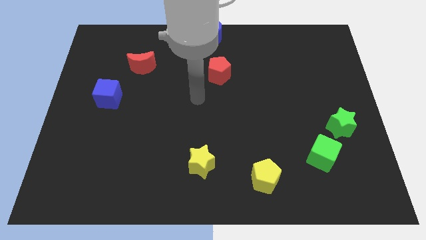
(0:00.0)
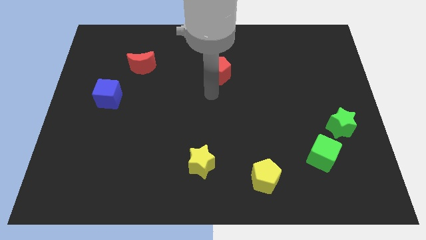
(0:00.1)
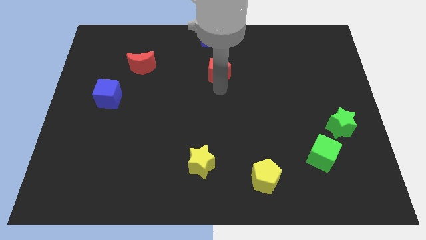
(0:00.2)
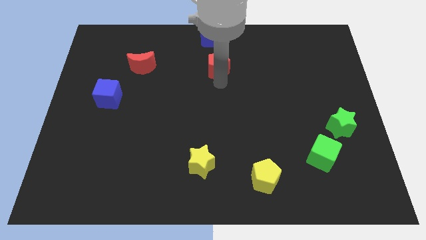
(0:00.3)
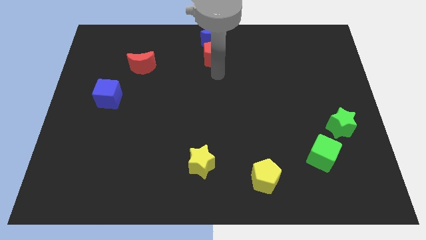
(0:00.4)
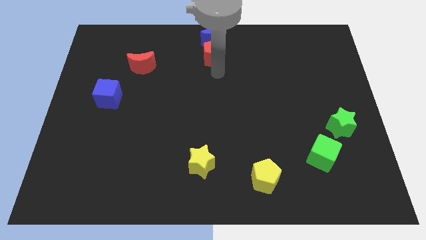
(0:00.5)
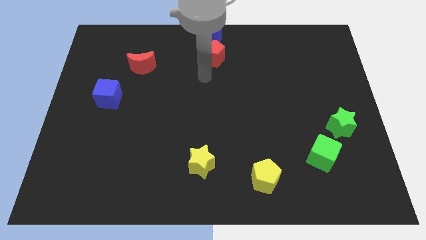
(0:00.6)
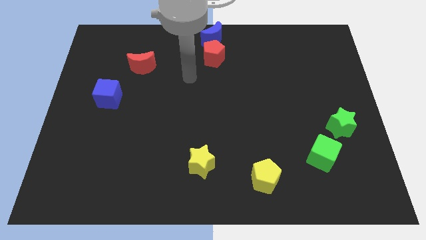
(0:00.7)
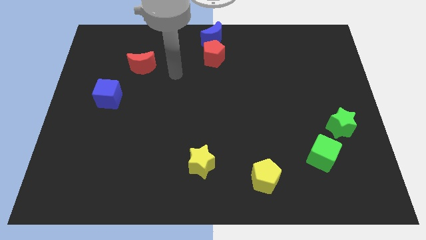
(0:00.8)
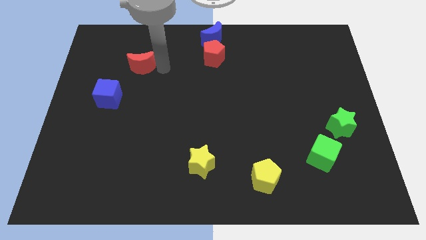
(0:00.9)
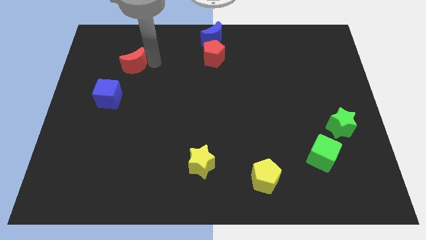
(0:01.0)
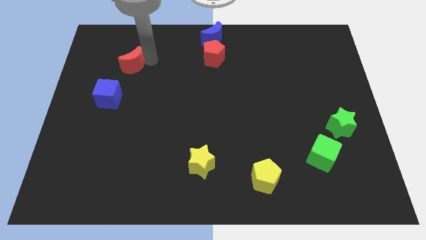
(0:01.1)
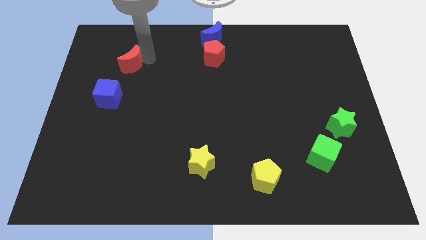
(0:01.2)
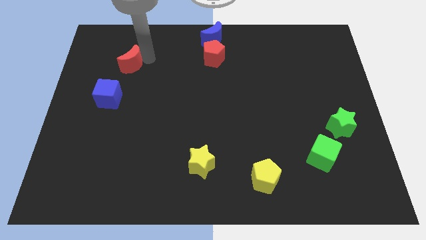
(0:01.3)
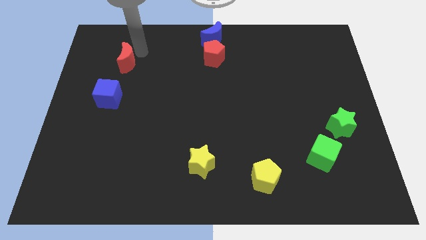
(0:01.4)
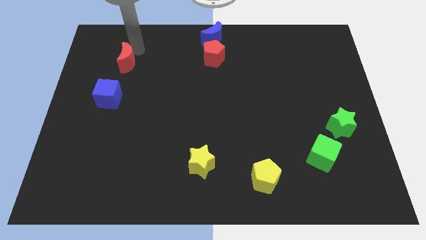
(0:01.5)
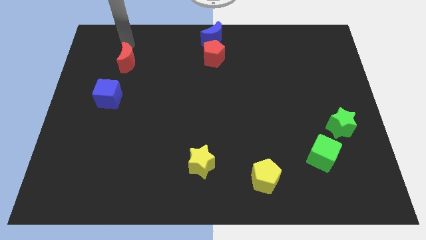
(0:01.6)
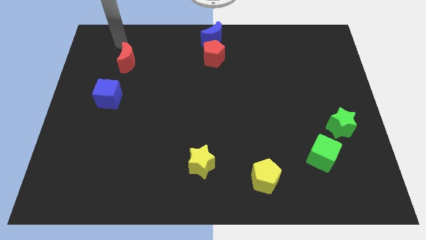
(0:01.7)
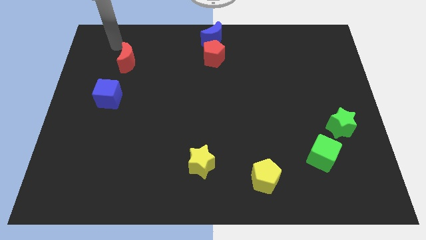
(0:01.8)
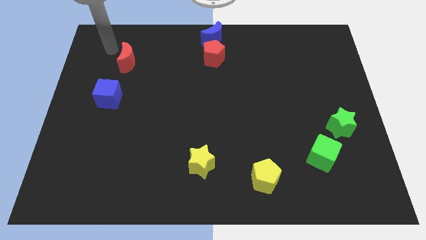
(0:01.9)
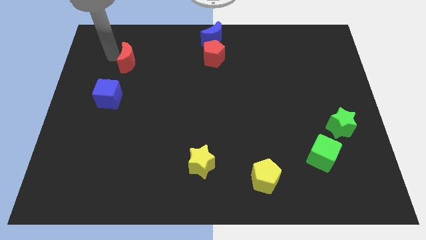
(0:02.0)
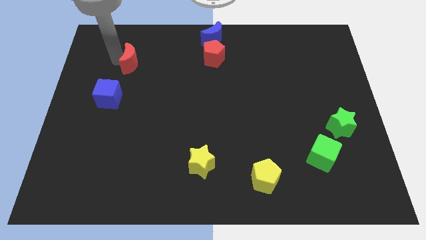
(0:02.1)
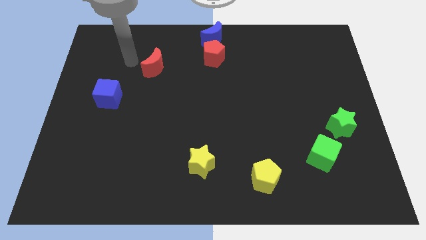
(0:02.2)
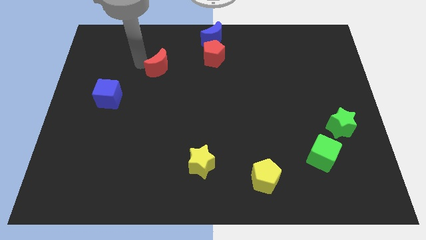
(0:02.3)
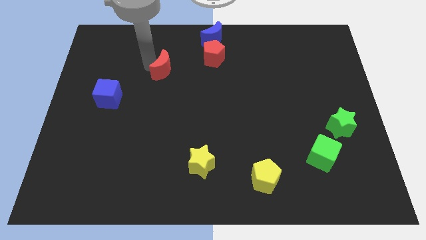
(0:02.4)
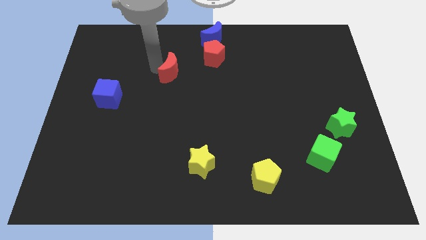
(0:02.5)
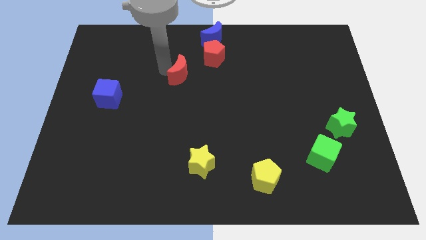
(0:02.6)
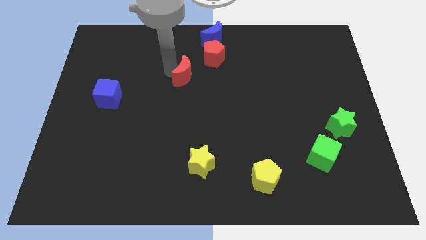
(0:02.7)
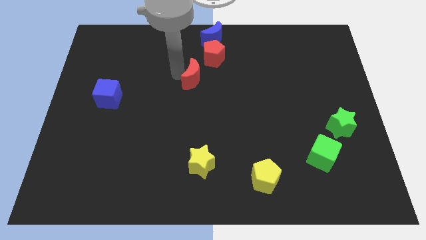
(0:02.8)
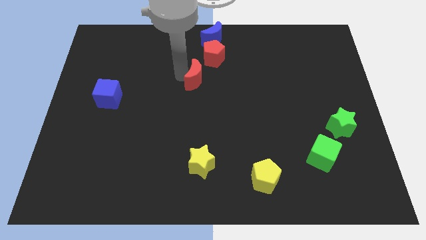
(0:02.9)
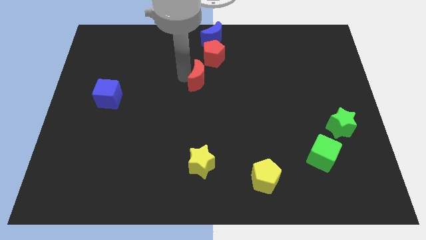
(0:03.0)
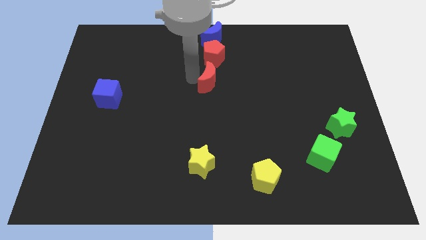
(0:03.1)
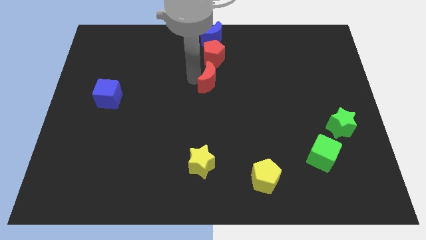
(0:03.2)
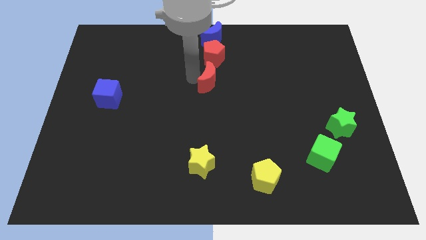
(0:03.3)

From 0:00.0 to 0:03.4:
place red crescent below red pentagon

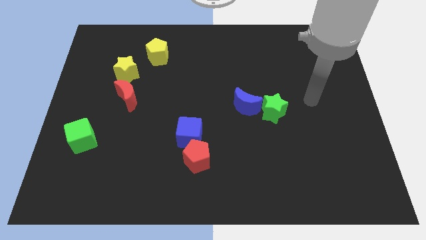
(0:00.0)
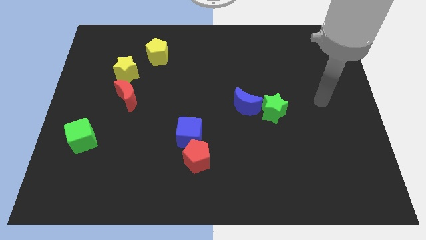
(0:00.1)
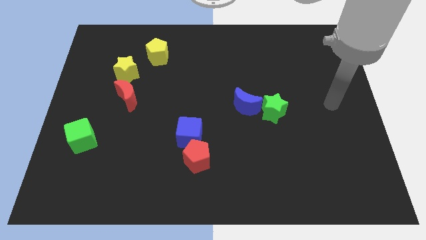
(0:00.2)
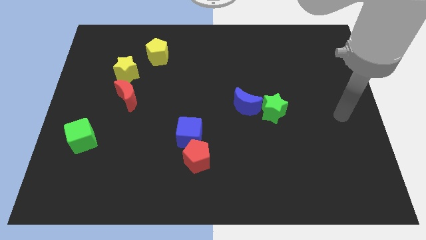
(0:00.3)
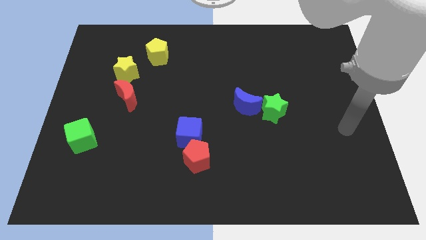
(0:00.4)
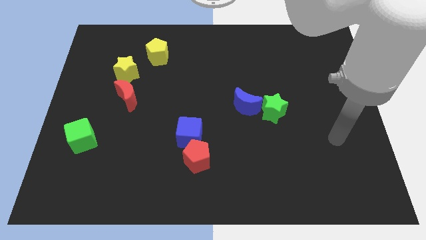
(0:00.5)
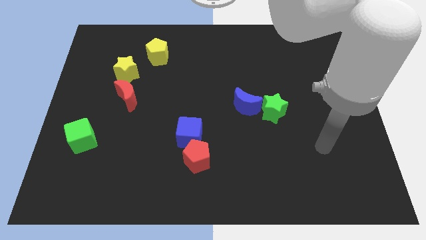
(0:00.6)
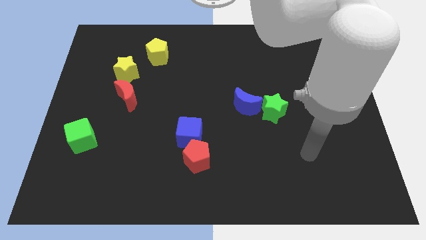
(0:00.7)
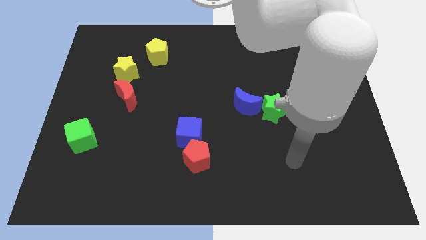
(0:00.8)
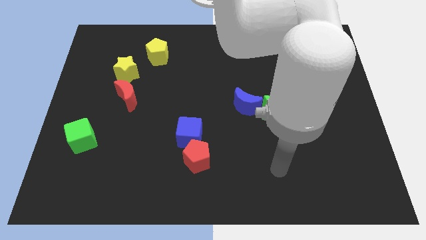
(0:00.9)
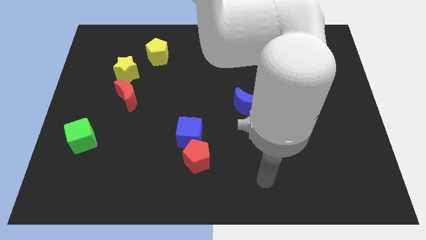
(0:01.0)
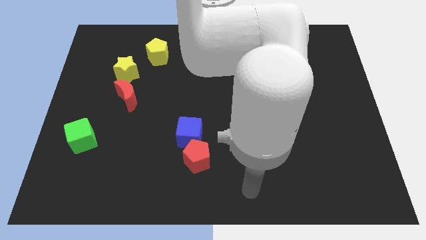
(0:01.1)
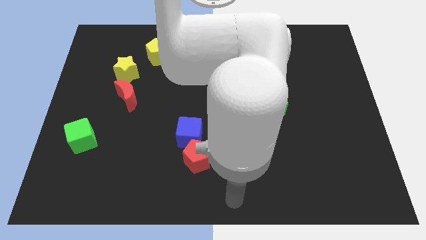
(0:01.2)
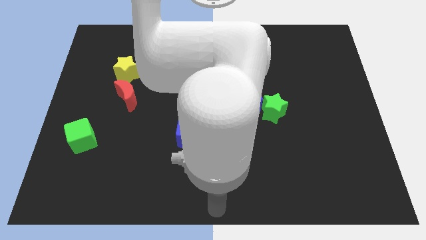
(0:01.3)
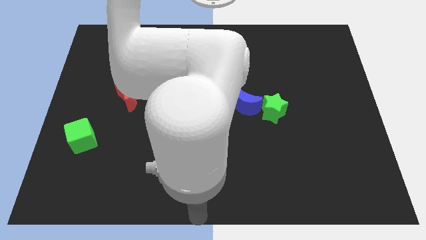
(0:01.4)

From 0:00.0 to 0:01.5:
move your hand to the bottom center

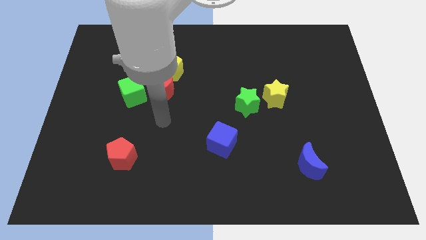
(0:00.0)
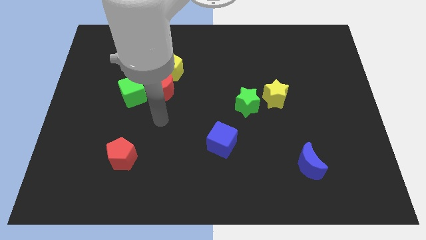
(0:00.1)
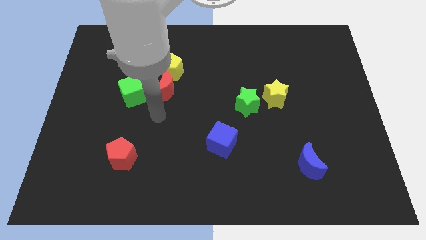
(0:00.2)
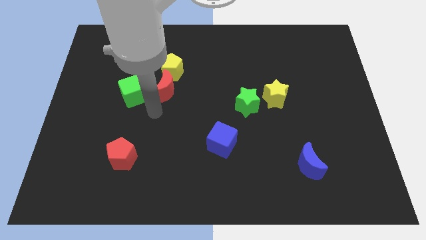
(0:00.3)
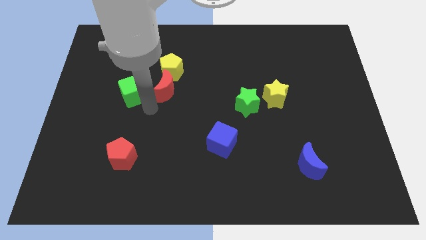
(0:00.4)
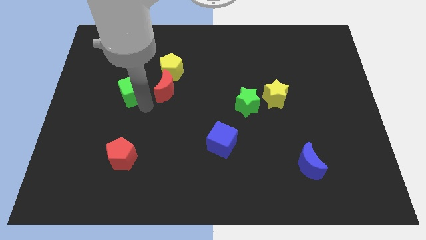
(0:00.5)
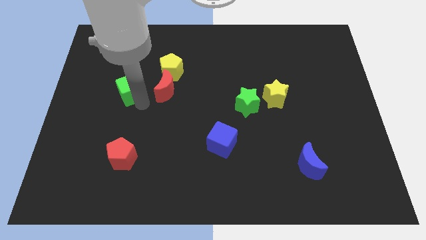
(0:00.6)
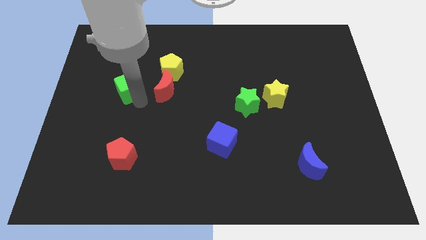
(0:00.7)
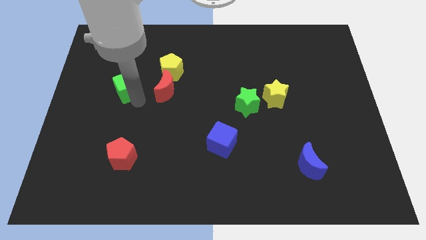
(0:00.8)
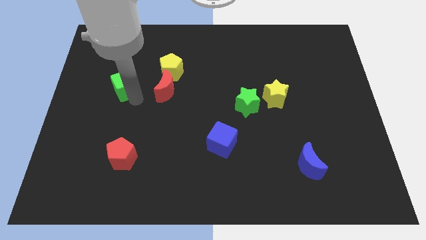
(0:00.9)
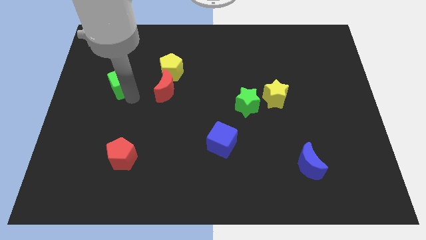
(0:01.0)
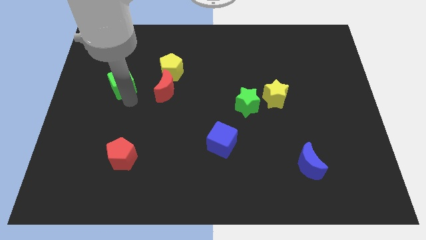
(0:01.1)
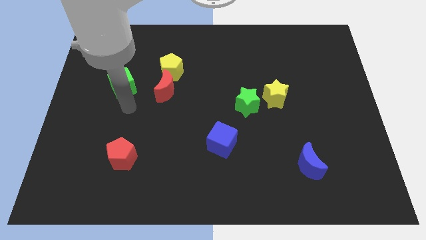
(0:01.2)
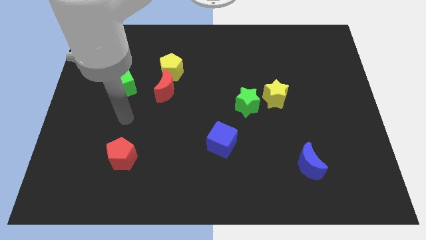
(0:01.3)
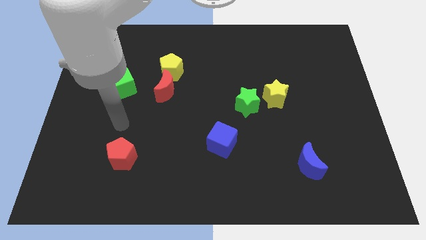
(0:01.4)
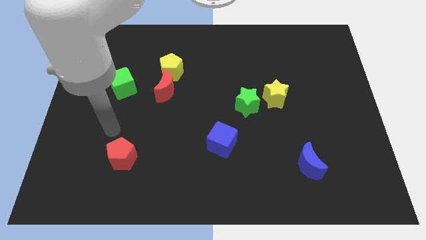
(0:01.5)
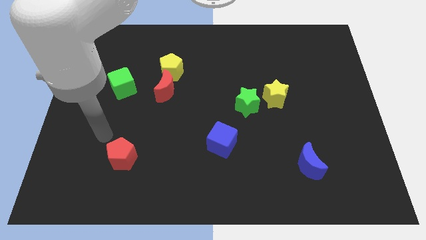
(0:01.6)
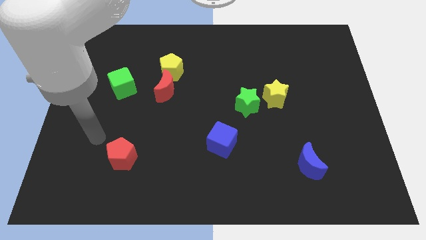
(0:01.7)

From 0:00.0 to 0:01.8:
push the green cube slightly to the top

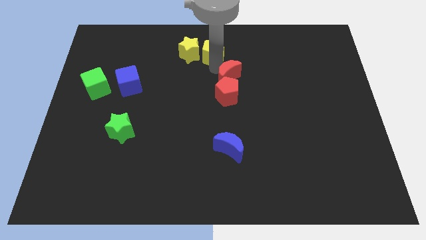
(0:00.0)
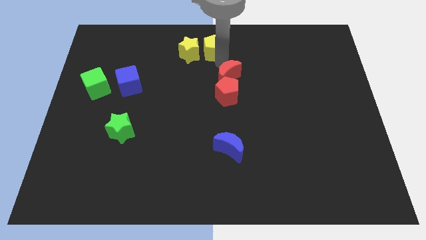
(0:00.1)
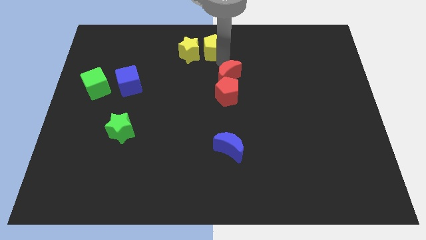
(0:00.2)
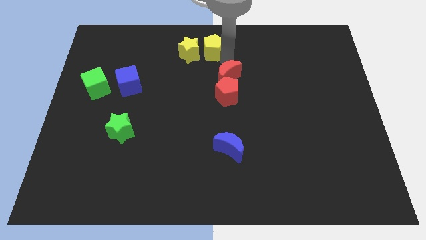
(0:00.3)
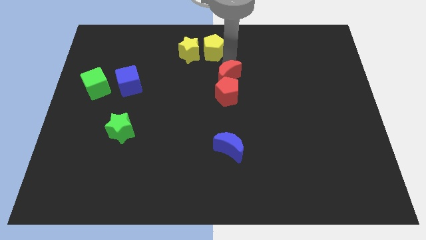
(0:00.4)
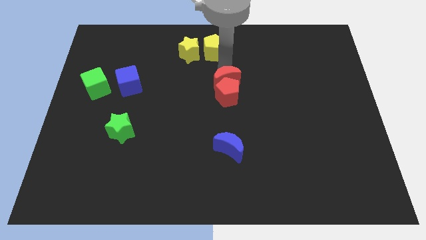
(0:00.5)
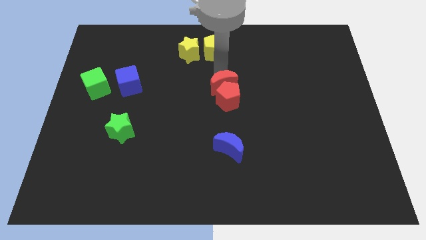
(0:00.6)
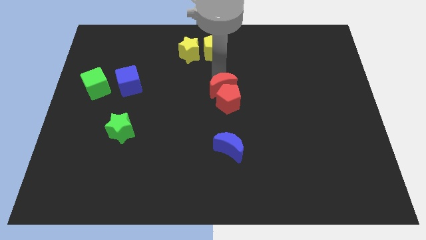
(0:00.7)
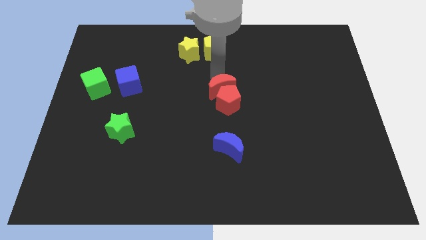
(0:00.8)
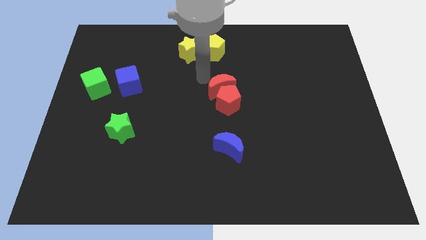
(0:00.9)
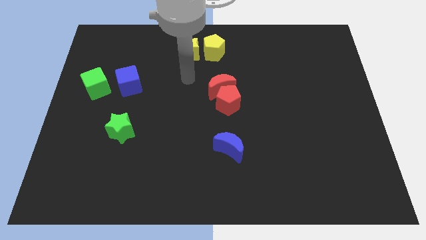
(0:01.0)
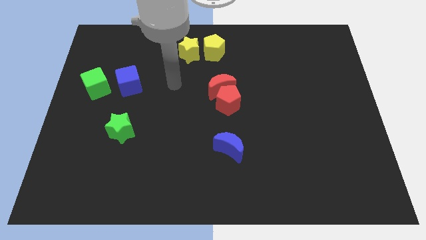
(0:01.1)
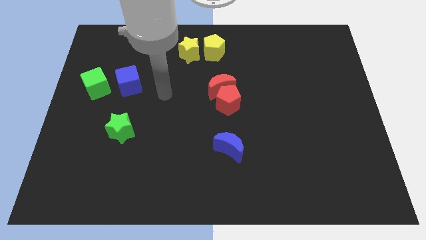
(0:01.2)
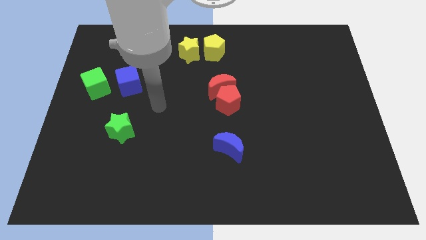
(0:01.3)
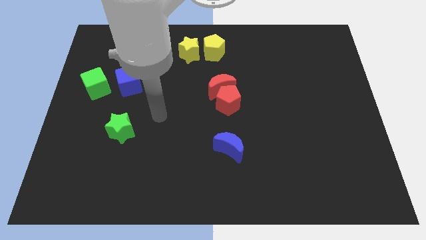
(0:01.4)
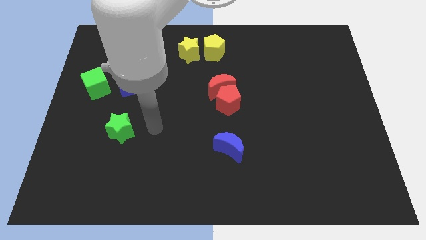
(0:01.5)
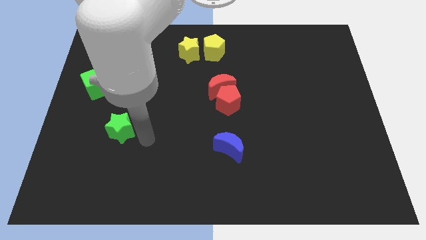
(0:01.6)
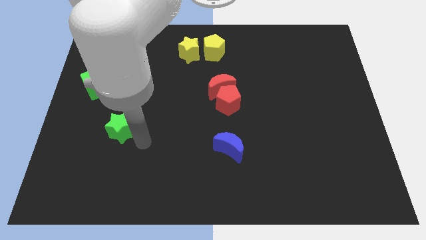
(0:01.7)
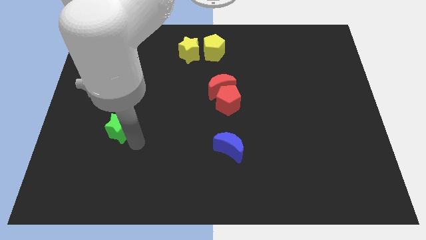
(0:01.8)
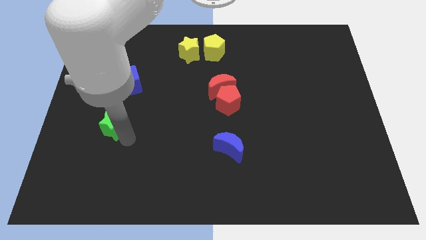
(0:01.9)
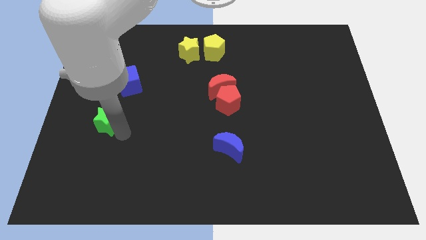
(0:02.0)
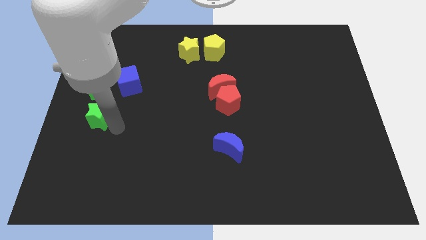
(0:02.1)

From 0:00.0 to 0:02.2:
place green star below green cube
